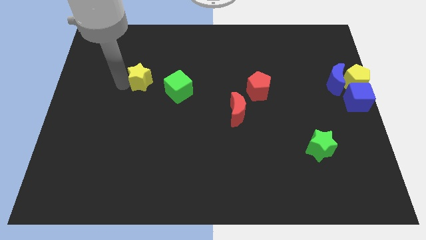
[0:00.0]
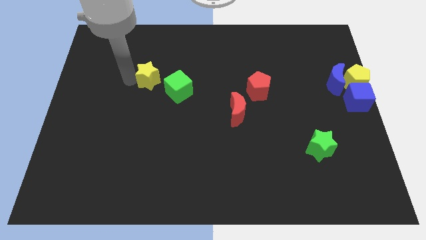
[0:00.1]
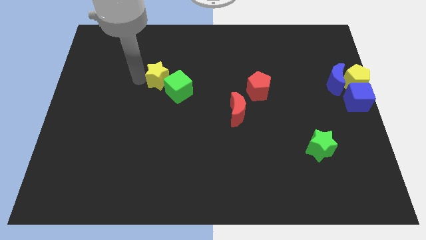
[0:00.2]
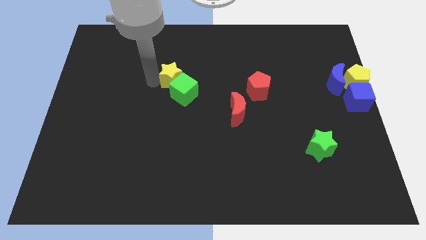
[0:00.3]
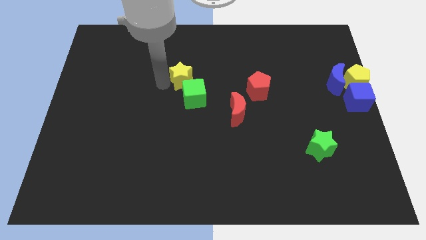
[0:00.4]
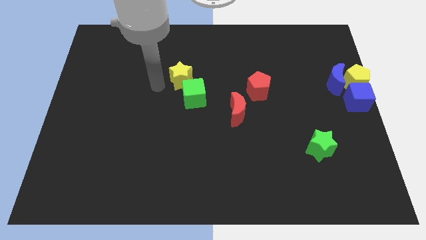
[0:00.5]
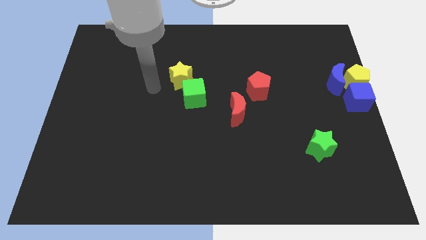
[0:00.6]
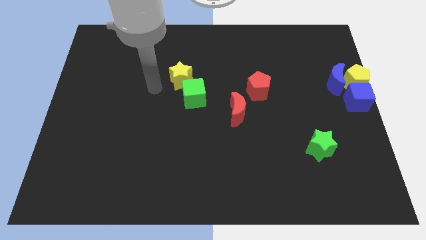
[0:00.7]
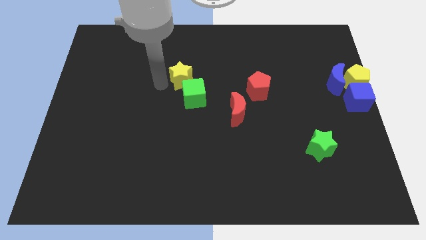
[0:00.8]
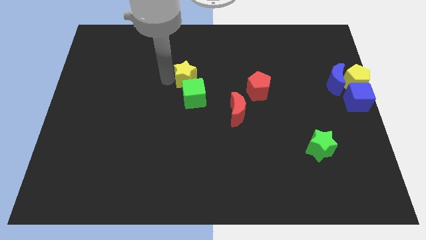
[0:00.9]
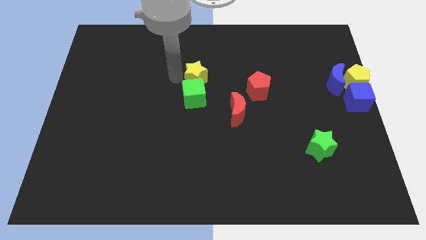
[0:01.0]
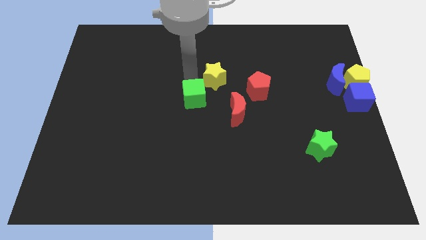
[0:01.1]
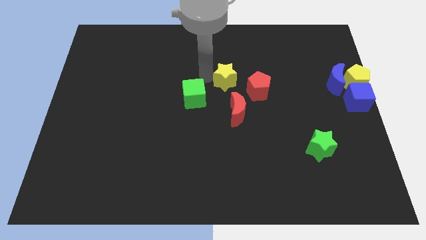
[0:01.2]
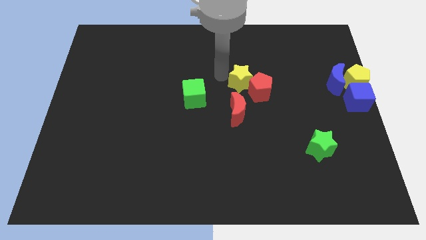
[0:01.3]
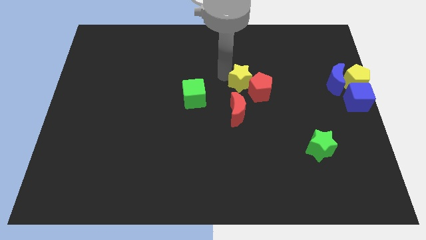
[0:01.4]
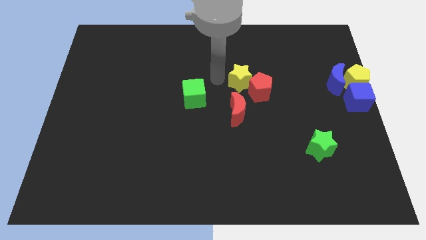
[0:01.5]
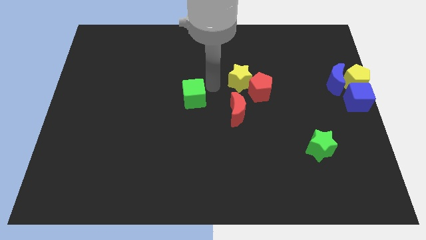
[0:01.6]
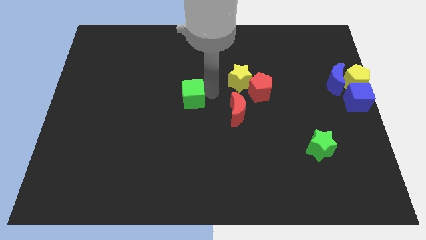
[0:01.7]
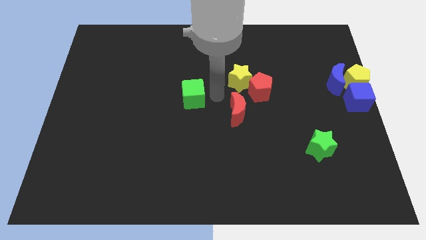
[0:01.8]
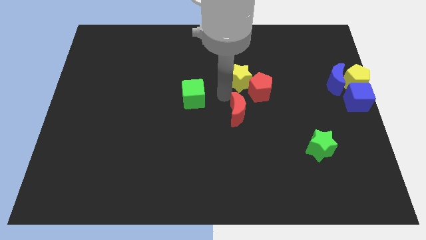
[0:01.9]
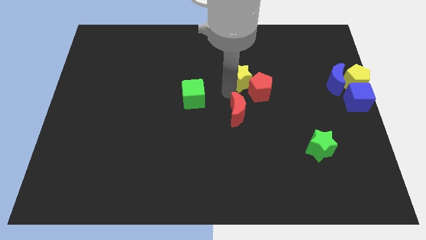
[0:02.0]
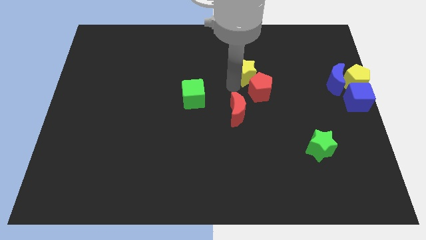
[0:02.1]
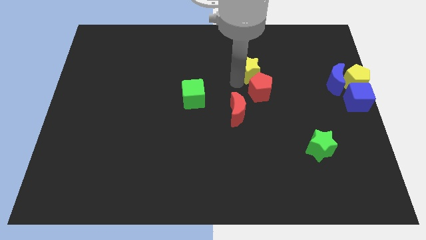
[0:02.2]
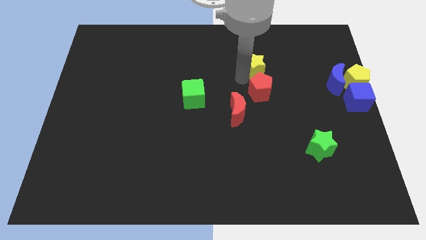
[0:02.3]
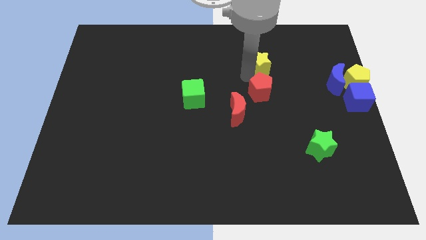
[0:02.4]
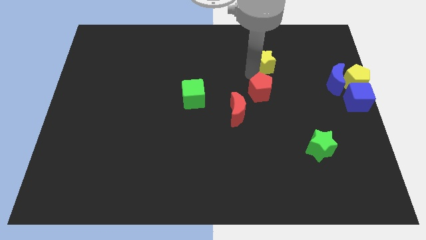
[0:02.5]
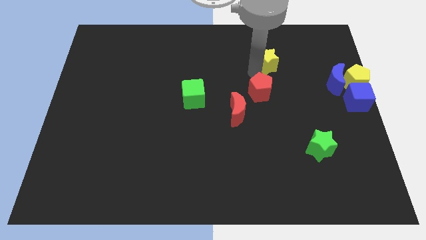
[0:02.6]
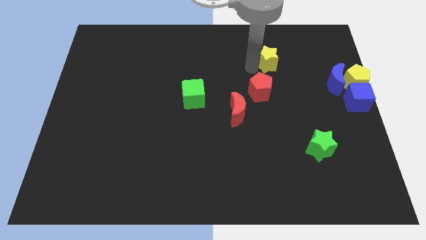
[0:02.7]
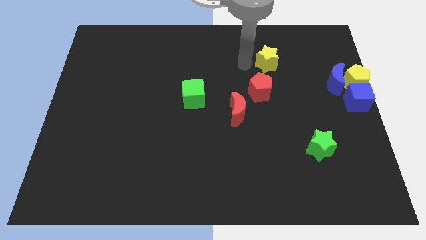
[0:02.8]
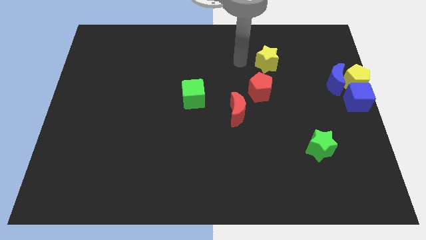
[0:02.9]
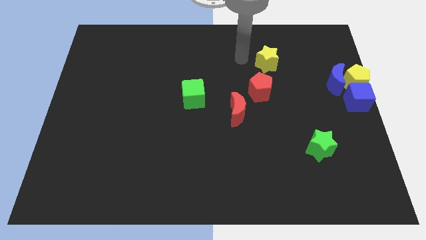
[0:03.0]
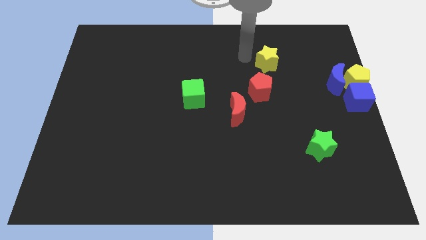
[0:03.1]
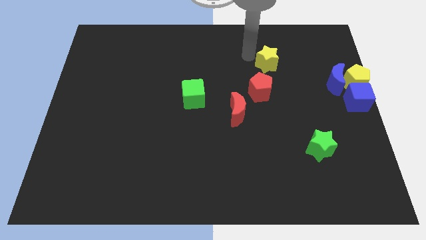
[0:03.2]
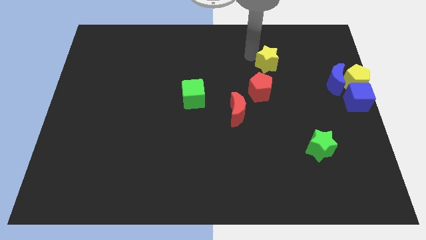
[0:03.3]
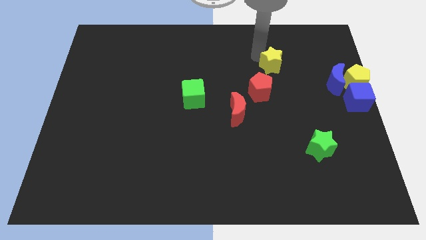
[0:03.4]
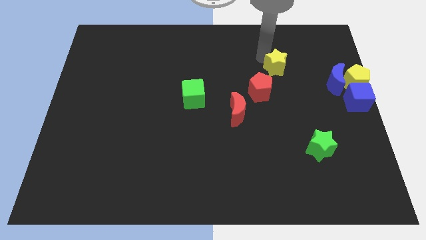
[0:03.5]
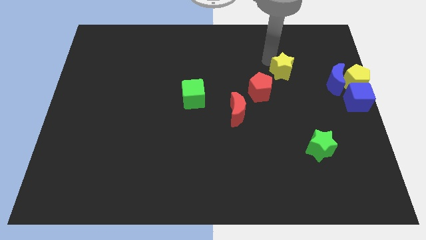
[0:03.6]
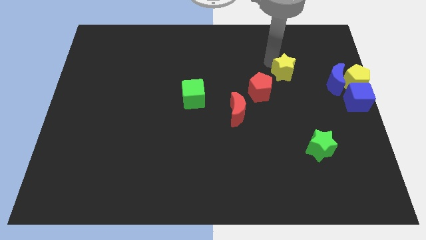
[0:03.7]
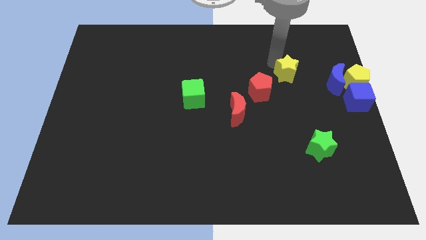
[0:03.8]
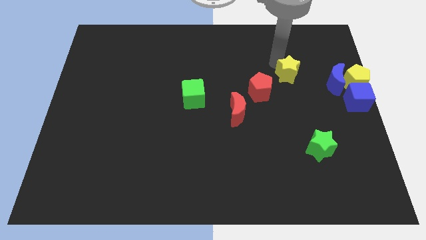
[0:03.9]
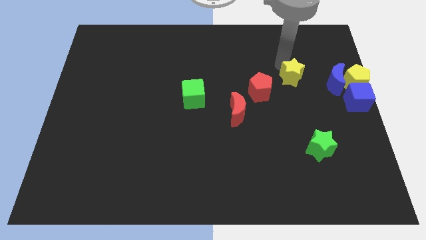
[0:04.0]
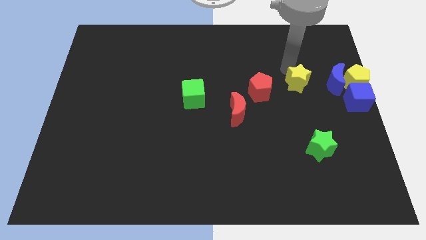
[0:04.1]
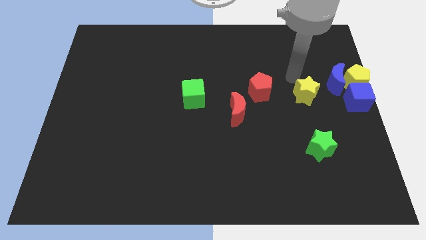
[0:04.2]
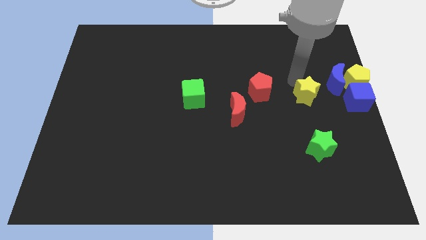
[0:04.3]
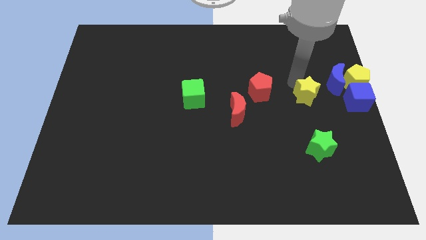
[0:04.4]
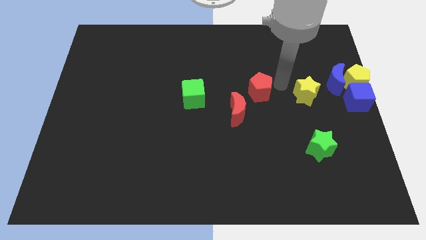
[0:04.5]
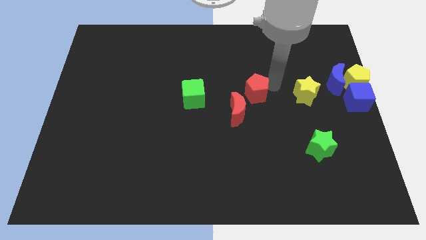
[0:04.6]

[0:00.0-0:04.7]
place the yellow star parallel left to blue cube

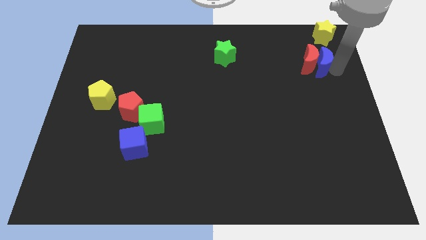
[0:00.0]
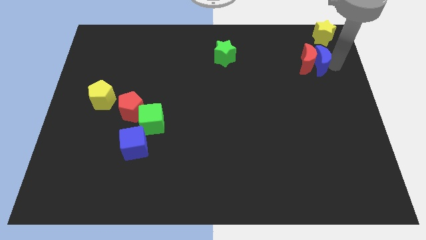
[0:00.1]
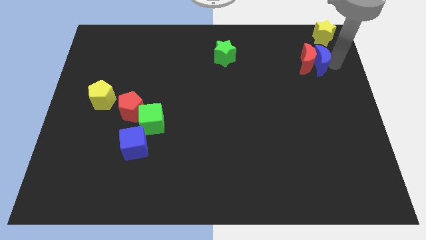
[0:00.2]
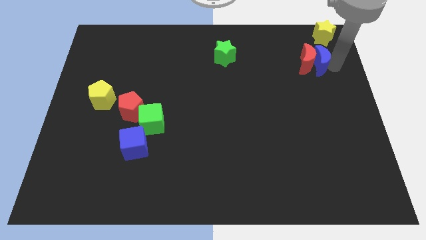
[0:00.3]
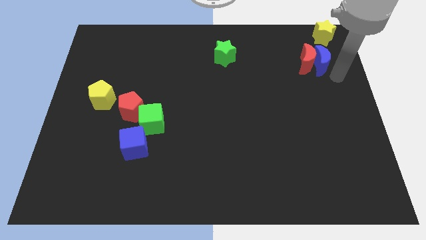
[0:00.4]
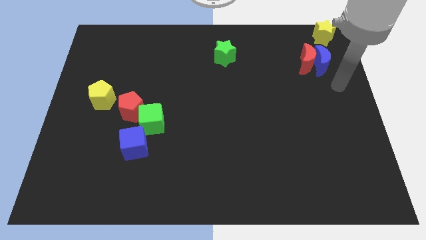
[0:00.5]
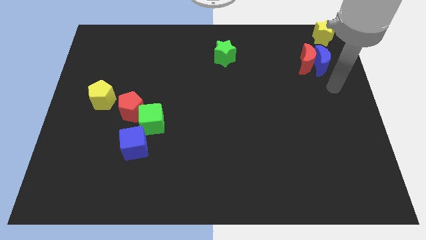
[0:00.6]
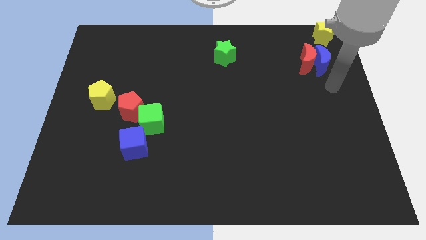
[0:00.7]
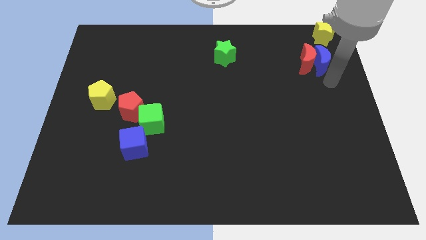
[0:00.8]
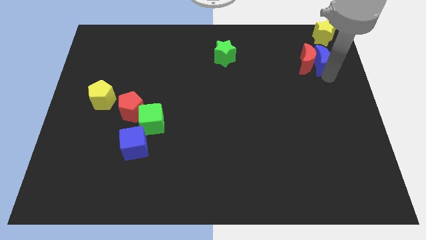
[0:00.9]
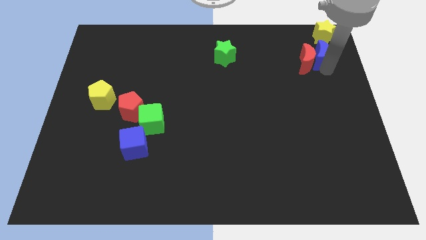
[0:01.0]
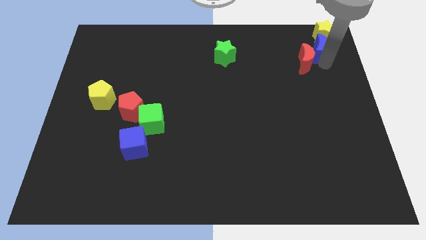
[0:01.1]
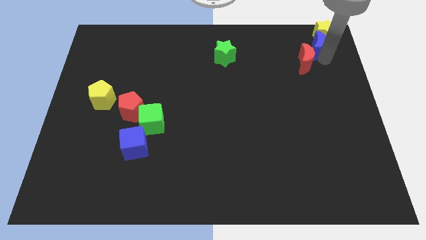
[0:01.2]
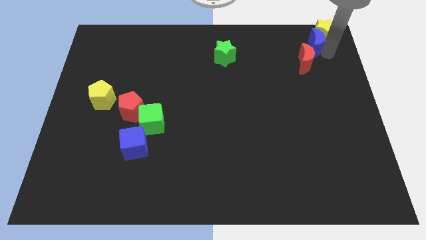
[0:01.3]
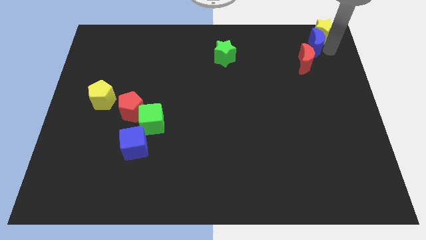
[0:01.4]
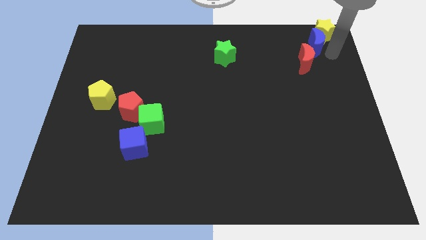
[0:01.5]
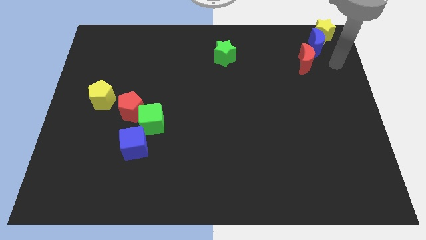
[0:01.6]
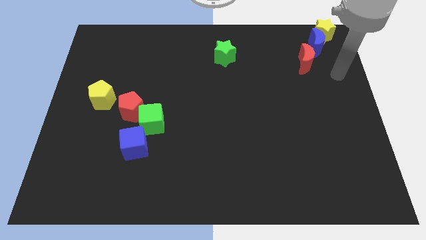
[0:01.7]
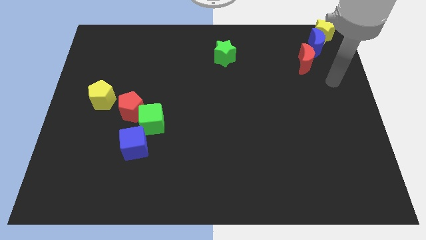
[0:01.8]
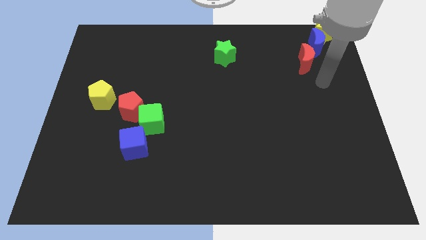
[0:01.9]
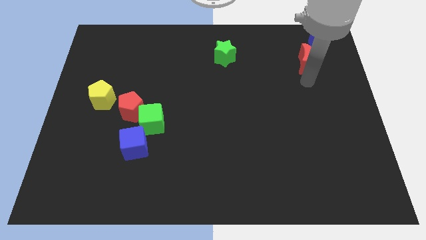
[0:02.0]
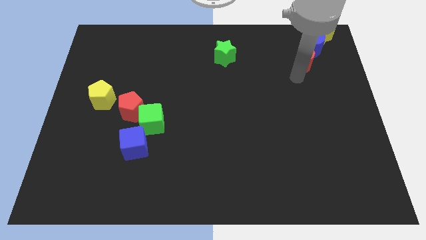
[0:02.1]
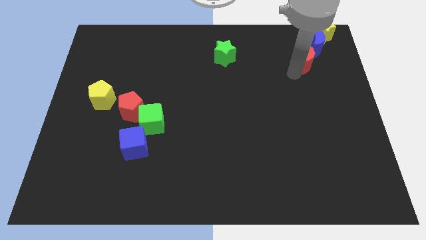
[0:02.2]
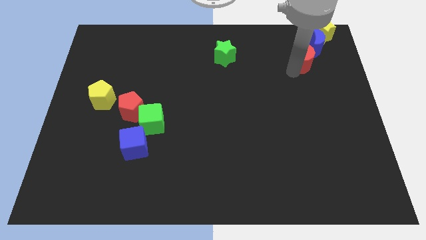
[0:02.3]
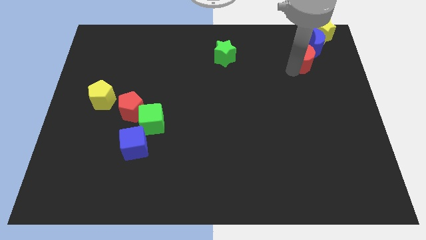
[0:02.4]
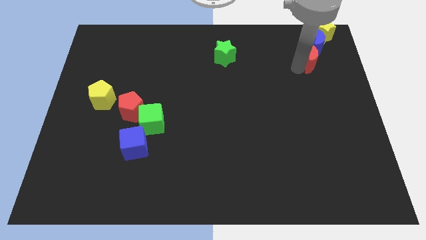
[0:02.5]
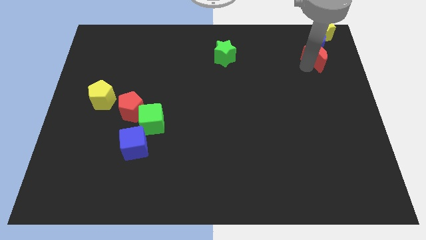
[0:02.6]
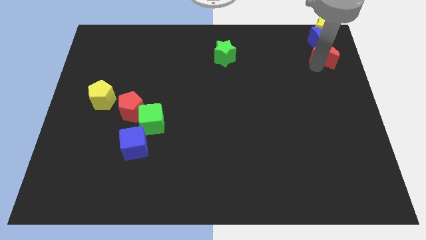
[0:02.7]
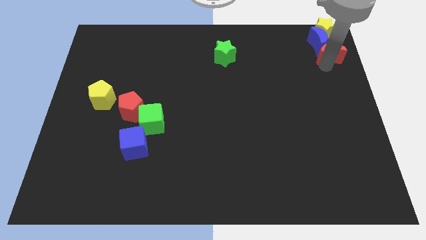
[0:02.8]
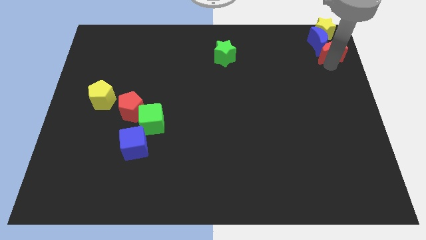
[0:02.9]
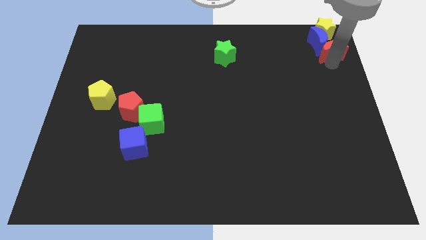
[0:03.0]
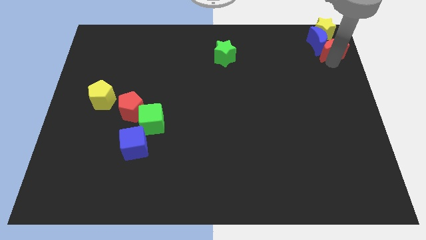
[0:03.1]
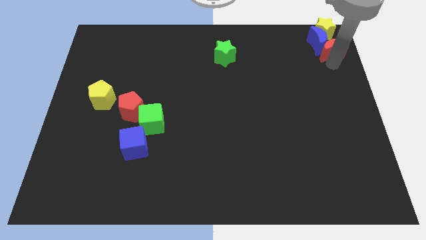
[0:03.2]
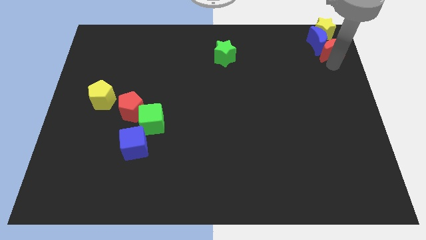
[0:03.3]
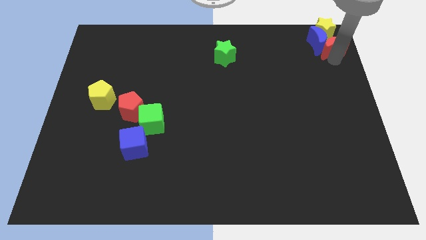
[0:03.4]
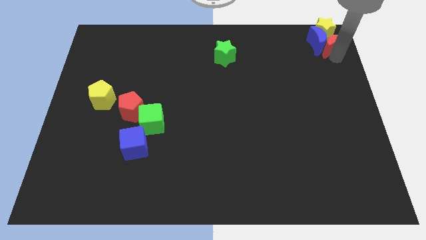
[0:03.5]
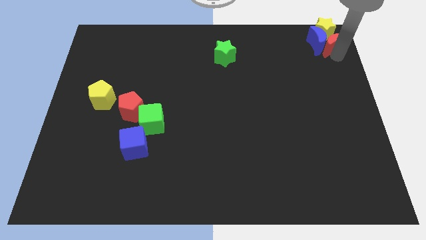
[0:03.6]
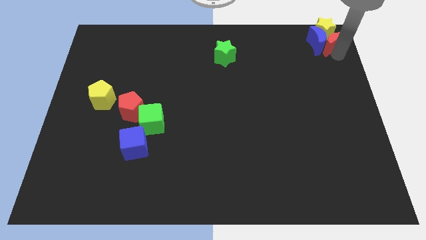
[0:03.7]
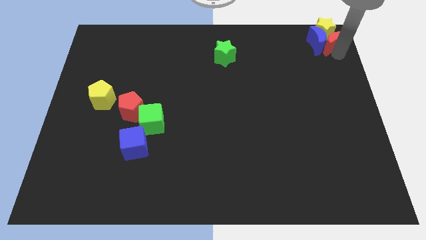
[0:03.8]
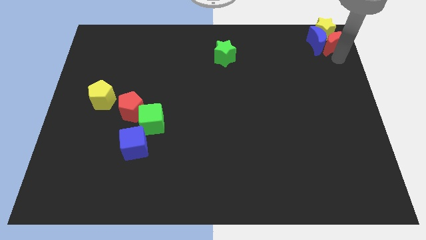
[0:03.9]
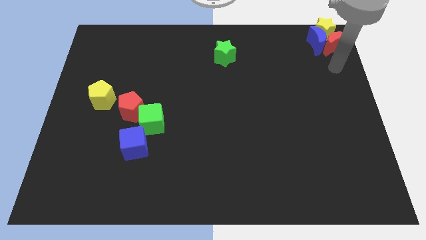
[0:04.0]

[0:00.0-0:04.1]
push the red and blue block into the yellow star
